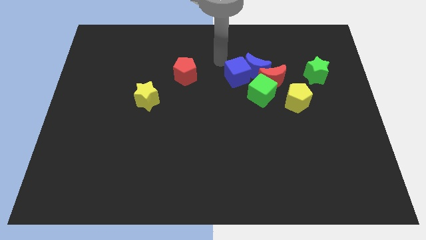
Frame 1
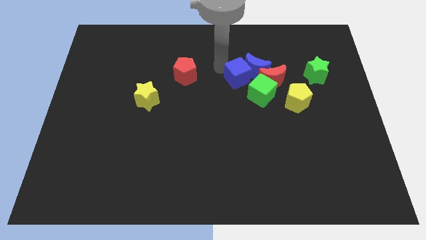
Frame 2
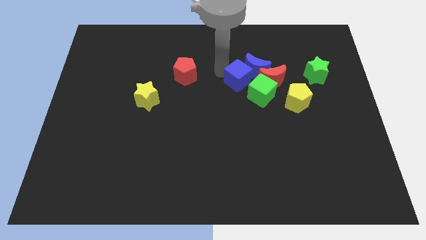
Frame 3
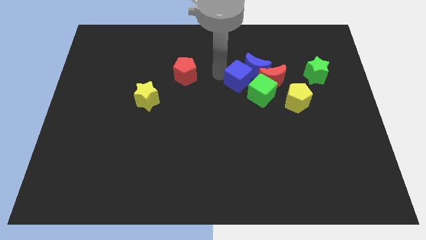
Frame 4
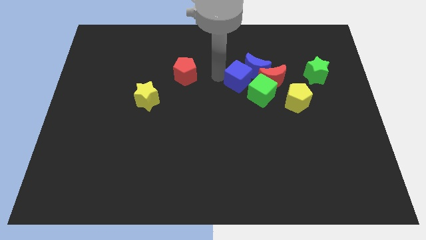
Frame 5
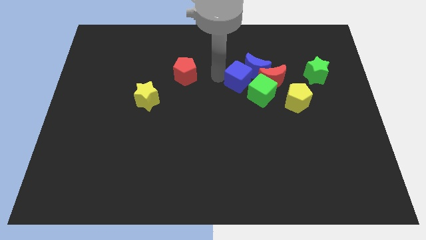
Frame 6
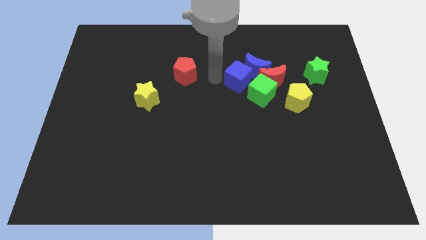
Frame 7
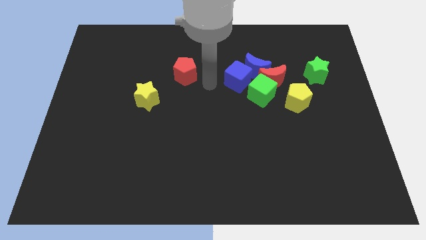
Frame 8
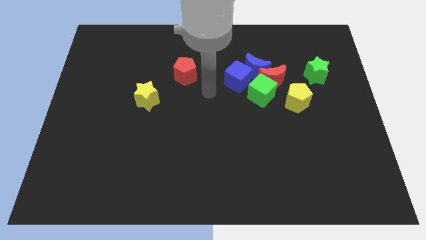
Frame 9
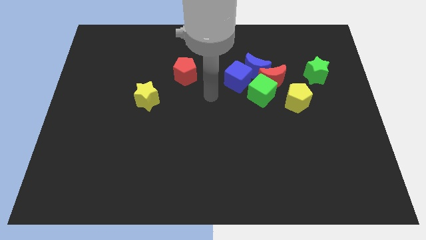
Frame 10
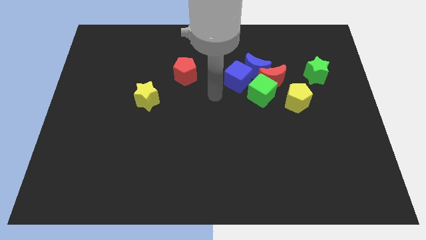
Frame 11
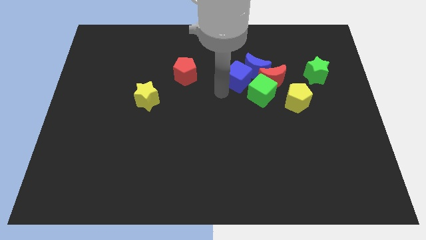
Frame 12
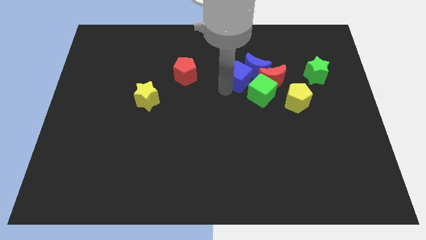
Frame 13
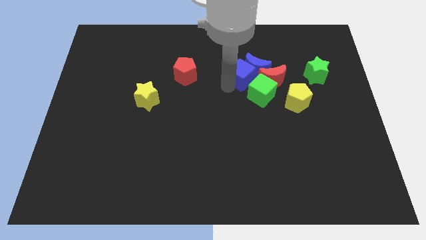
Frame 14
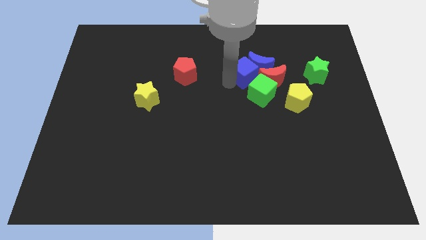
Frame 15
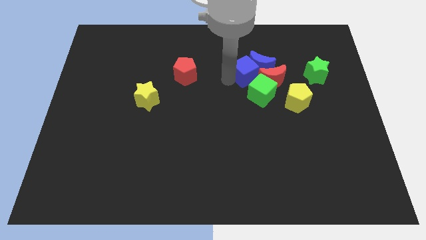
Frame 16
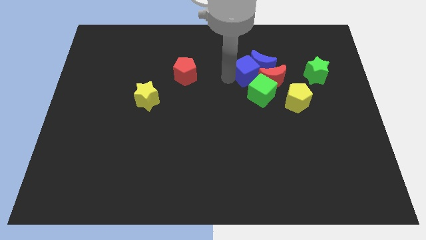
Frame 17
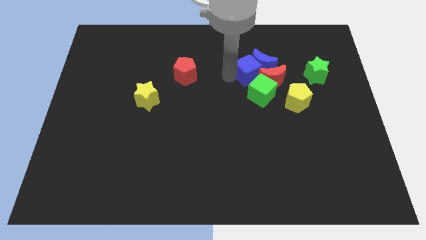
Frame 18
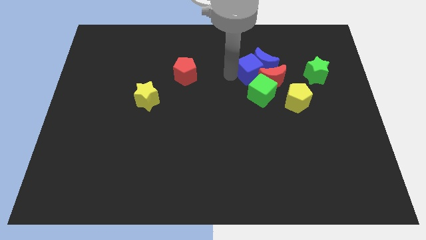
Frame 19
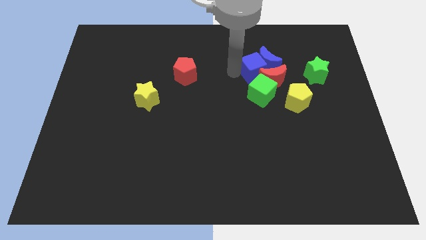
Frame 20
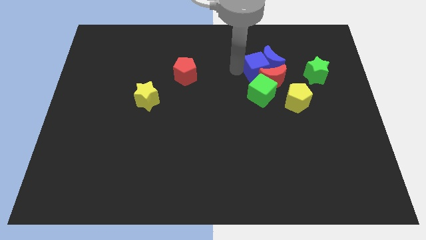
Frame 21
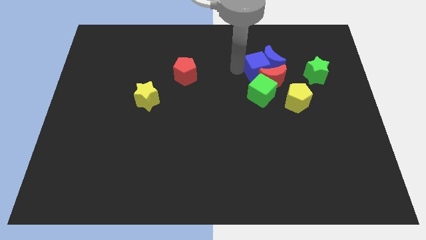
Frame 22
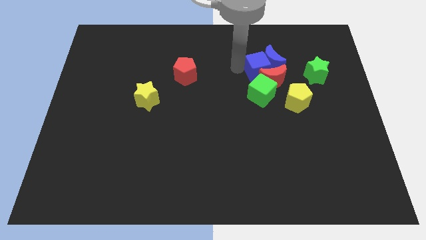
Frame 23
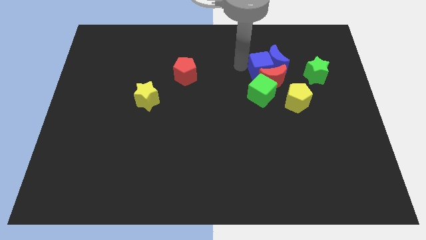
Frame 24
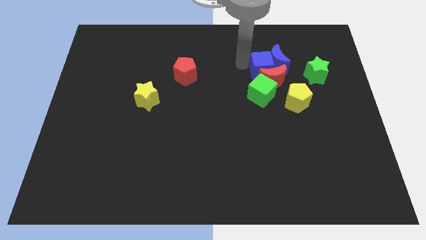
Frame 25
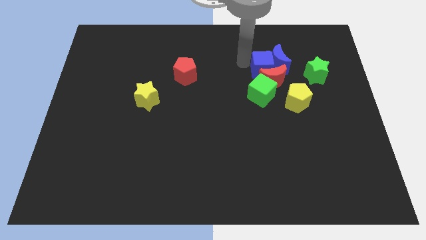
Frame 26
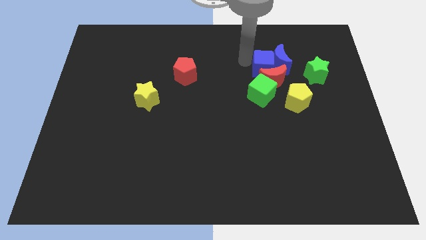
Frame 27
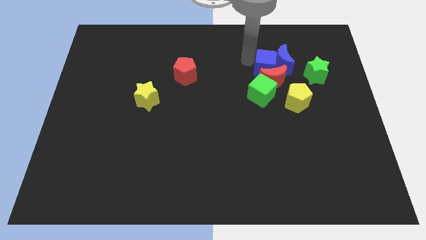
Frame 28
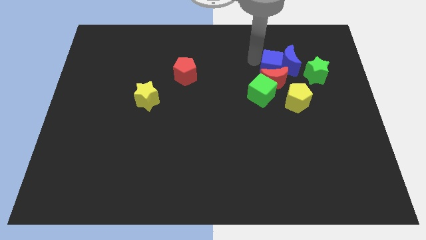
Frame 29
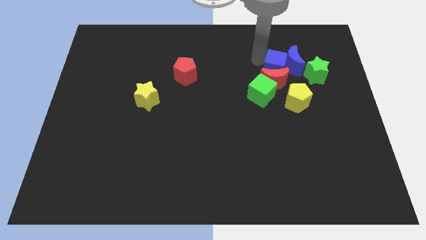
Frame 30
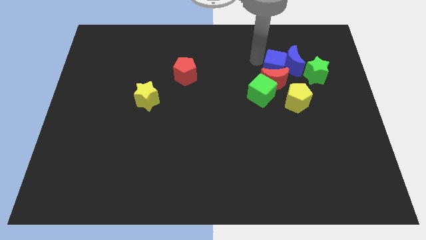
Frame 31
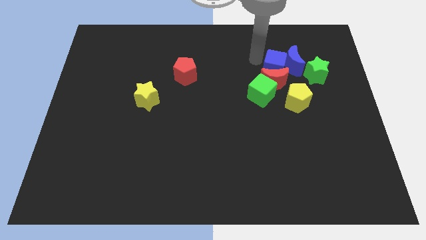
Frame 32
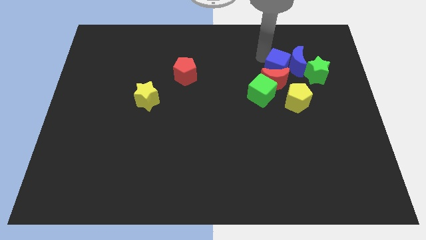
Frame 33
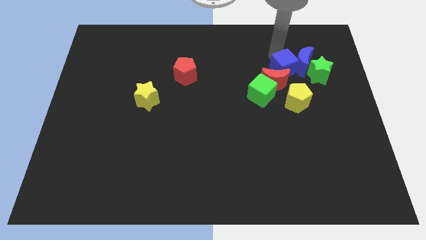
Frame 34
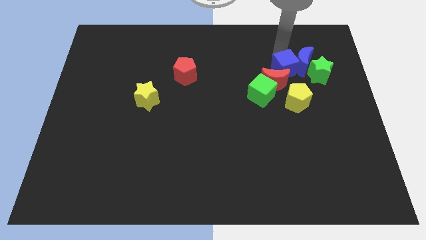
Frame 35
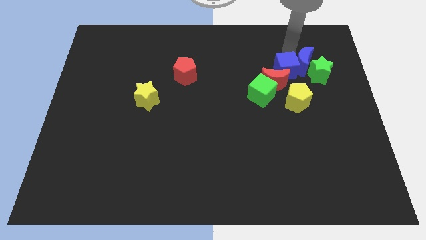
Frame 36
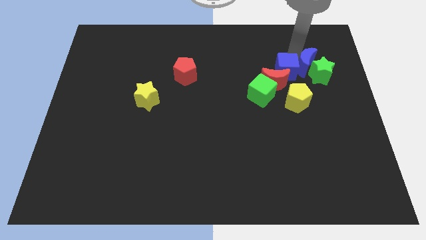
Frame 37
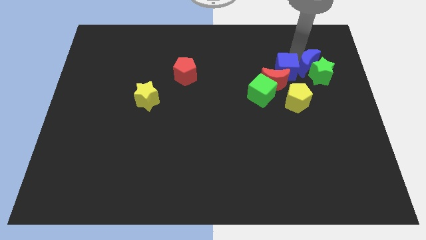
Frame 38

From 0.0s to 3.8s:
push the blue cube into the blue crescent

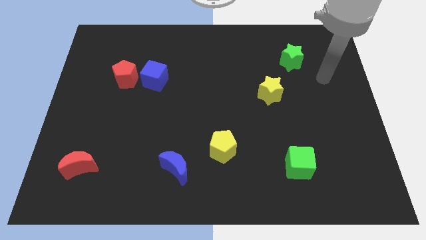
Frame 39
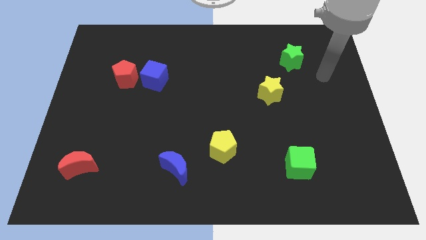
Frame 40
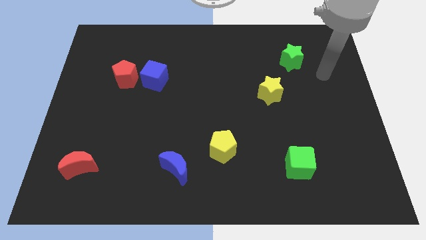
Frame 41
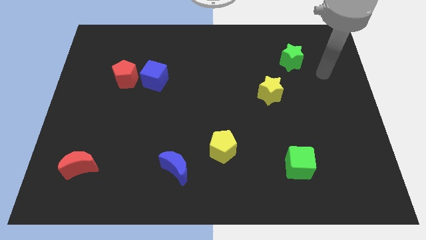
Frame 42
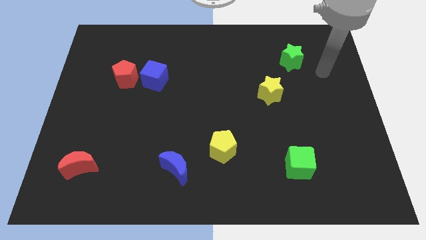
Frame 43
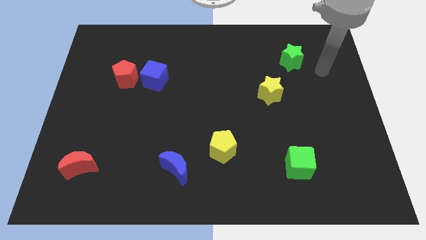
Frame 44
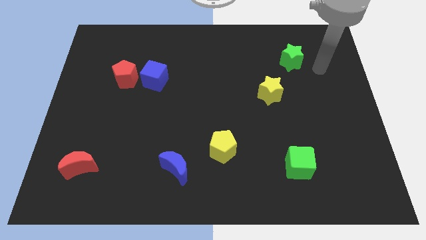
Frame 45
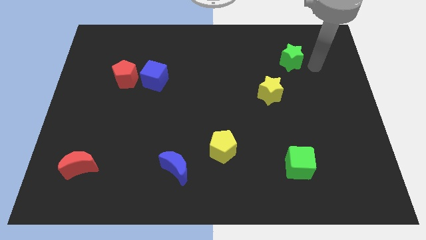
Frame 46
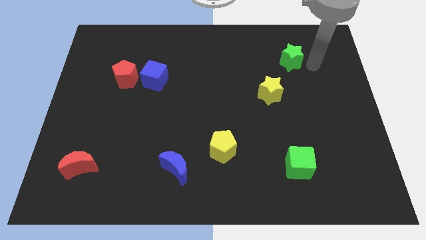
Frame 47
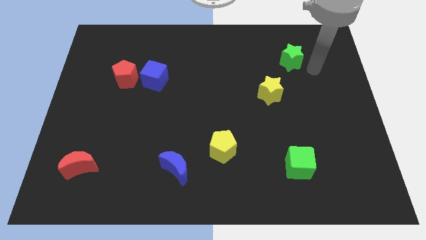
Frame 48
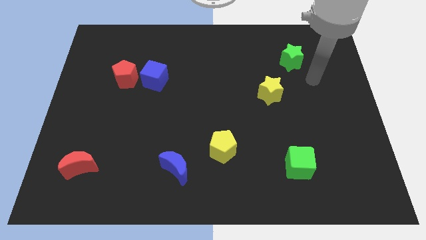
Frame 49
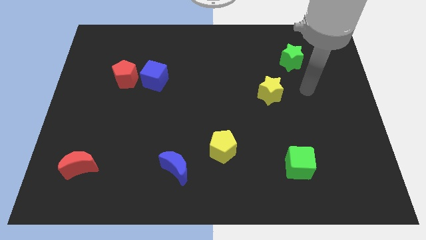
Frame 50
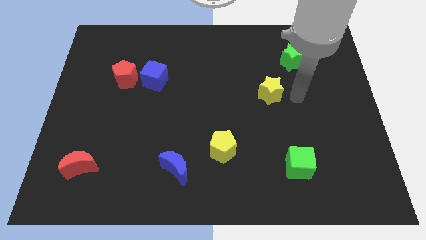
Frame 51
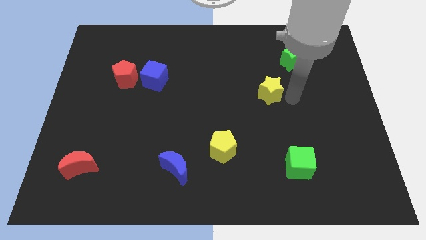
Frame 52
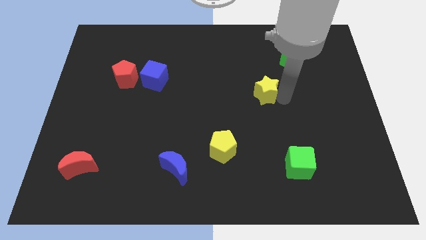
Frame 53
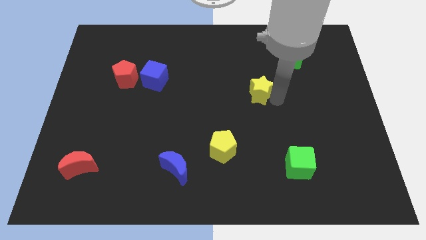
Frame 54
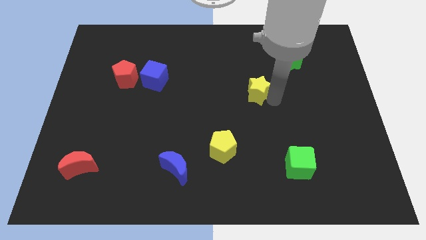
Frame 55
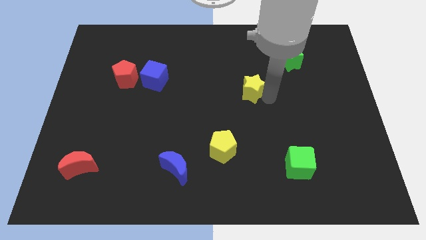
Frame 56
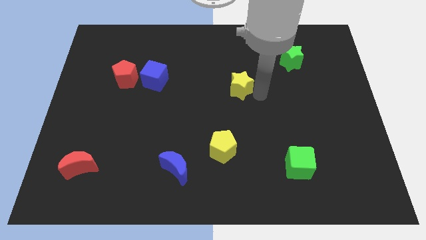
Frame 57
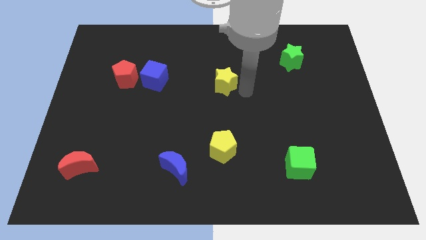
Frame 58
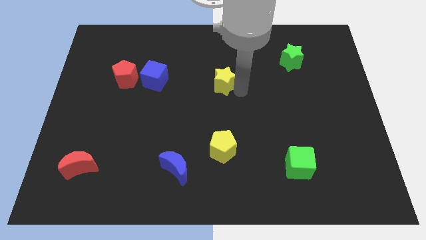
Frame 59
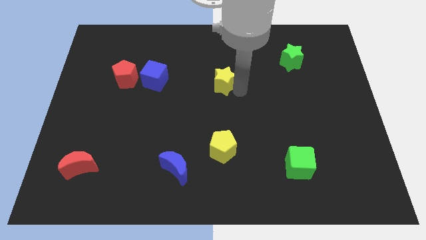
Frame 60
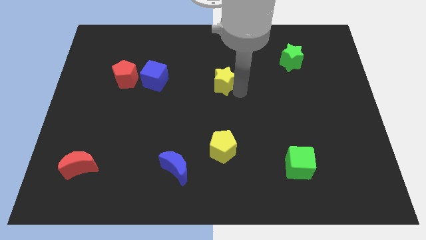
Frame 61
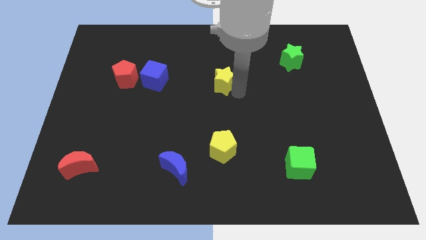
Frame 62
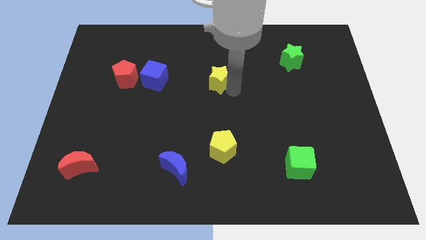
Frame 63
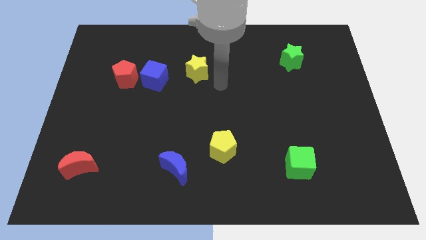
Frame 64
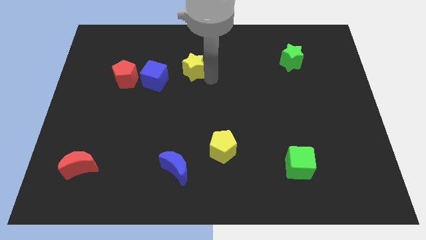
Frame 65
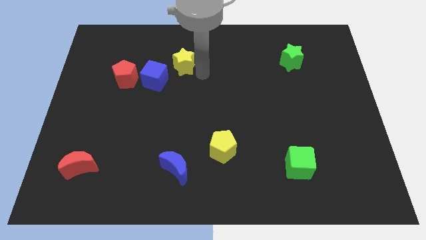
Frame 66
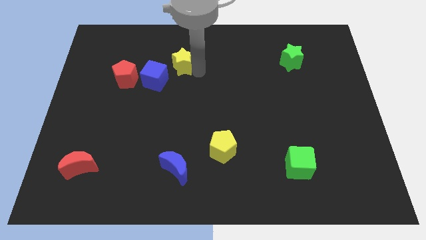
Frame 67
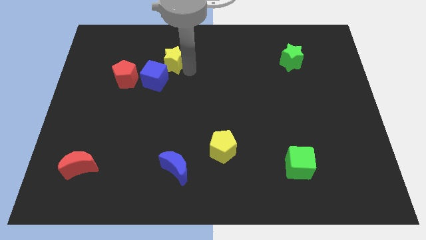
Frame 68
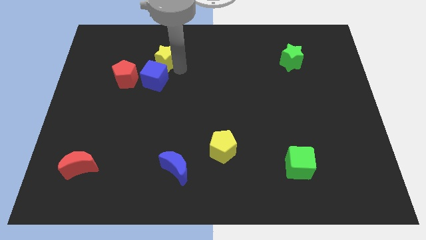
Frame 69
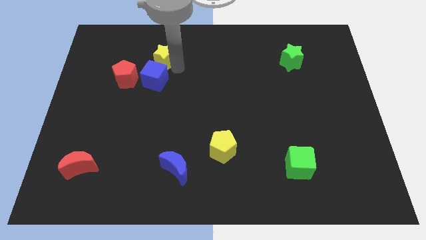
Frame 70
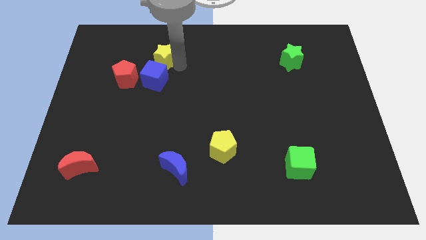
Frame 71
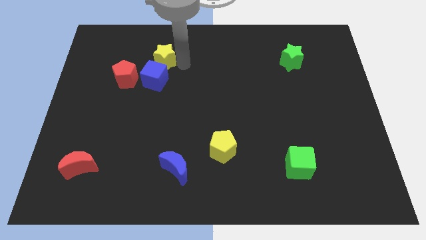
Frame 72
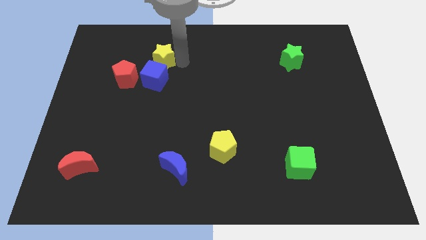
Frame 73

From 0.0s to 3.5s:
place yellow star to the top of the blue cube

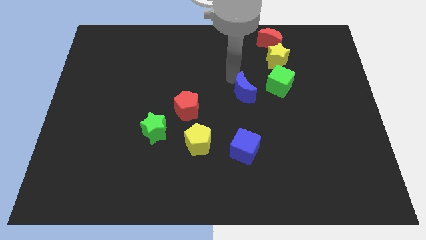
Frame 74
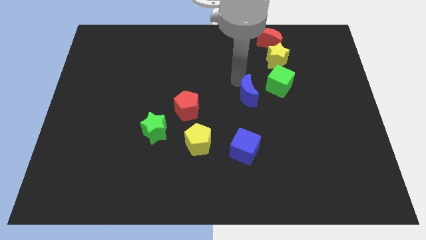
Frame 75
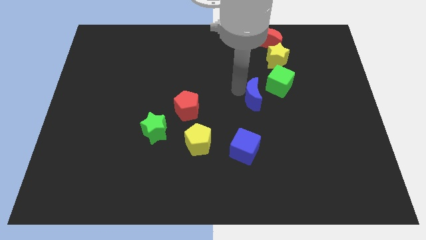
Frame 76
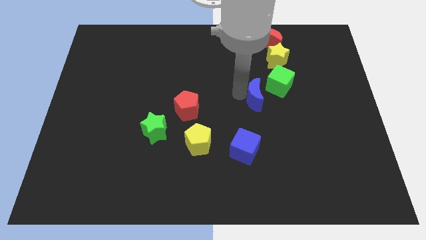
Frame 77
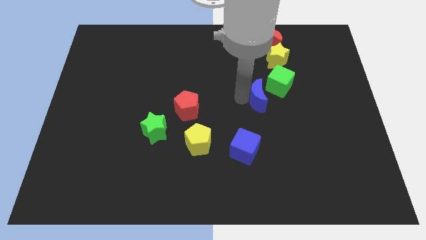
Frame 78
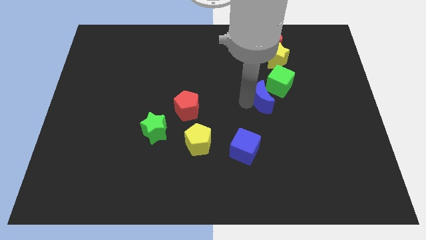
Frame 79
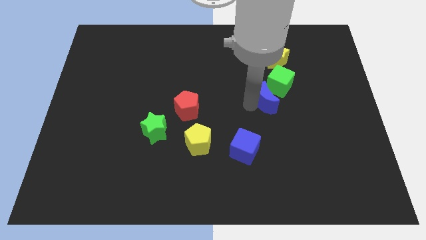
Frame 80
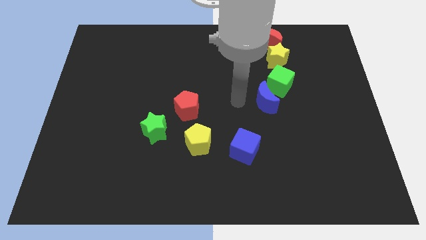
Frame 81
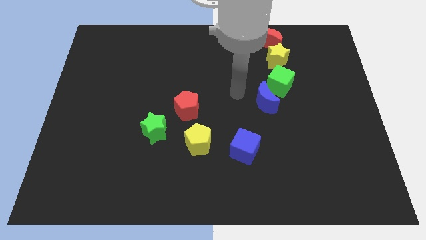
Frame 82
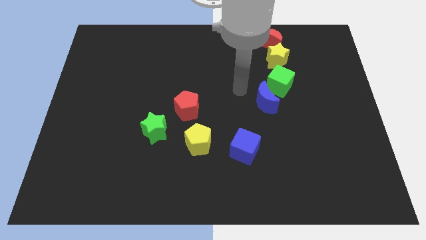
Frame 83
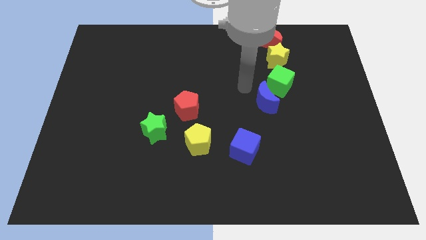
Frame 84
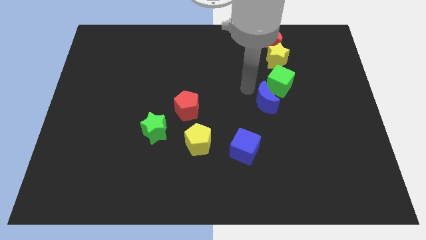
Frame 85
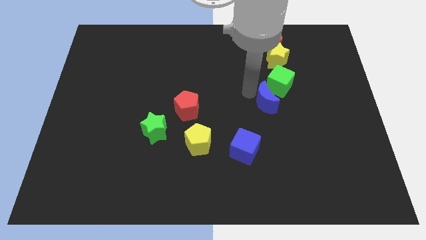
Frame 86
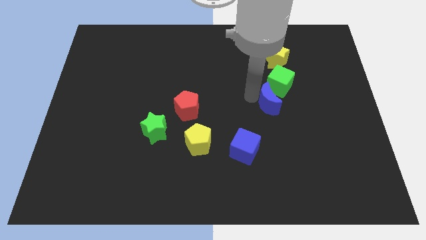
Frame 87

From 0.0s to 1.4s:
place the blue crescent below the green cube

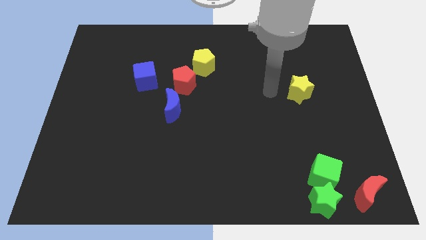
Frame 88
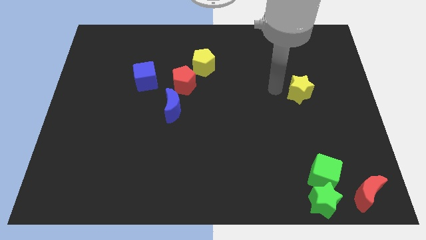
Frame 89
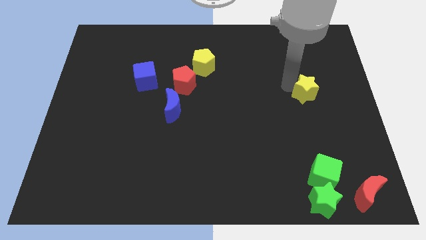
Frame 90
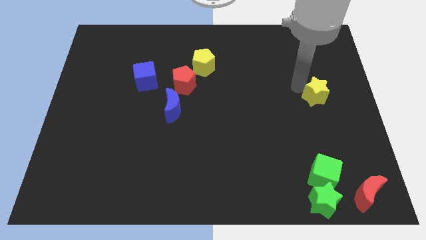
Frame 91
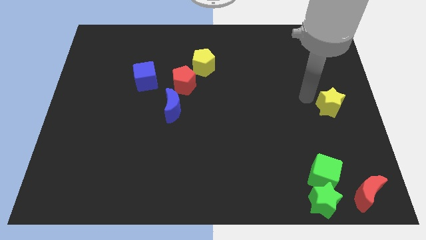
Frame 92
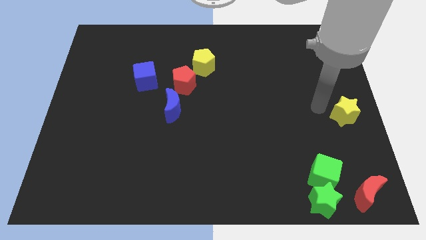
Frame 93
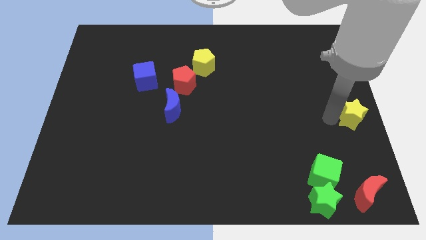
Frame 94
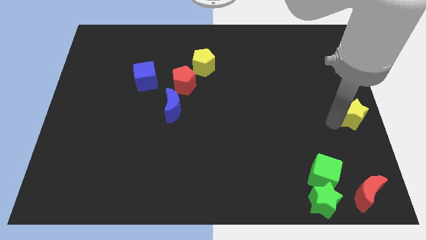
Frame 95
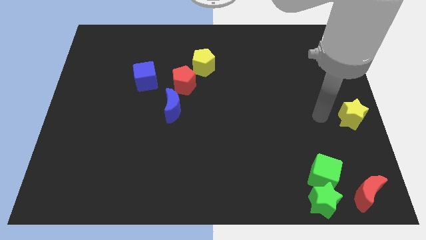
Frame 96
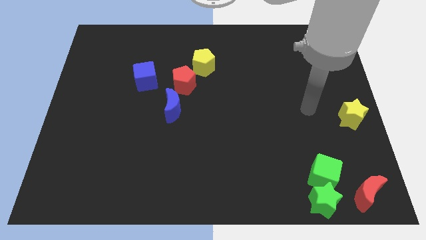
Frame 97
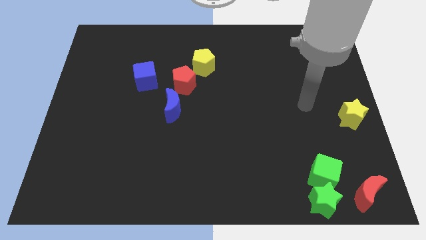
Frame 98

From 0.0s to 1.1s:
push the yellow star to the right center of the board
